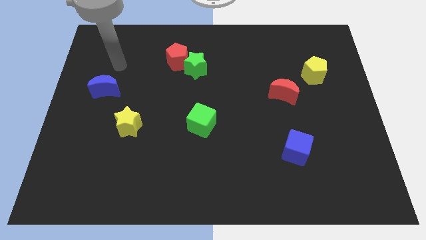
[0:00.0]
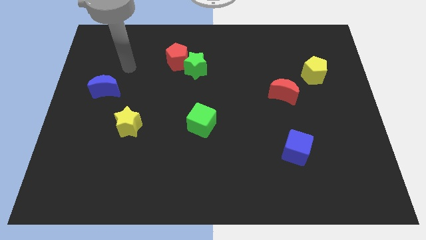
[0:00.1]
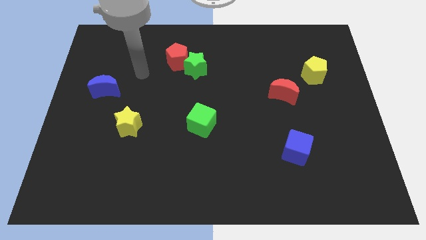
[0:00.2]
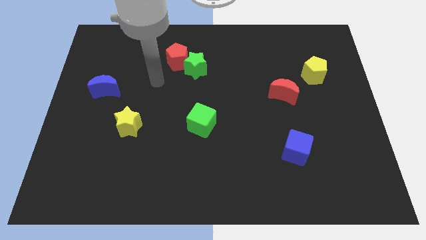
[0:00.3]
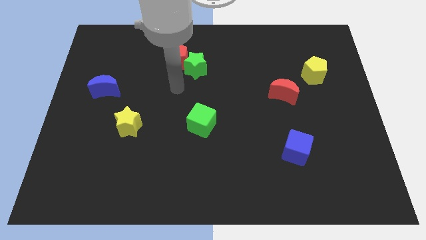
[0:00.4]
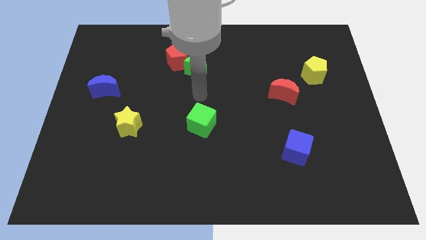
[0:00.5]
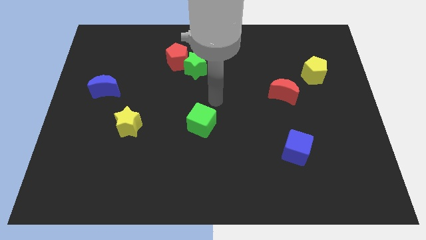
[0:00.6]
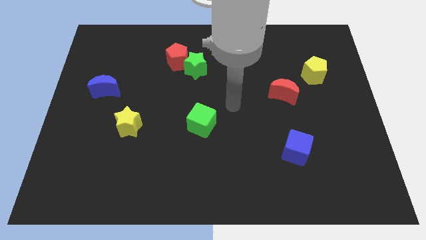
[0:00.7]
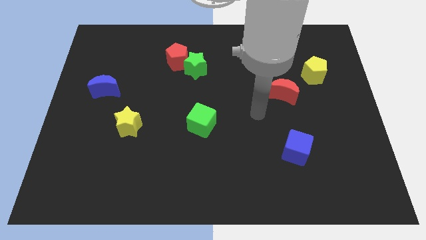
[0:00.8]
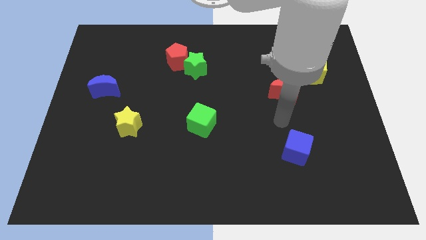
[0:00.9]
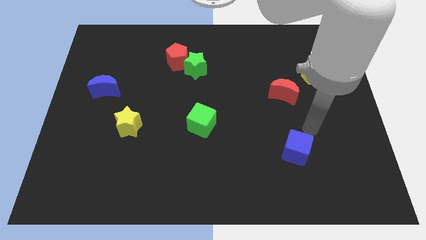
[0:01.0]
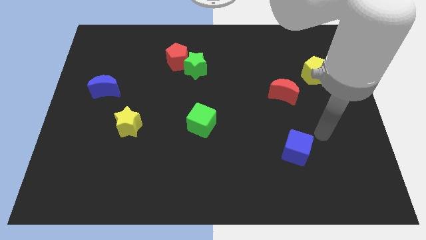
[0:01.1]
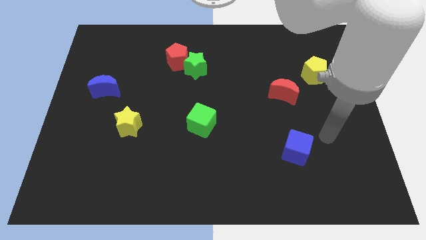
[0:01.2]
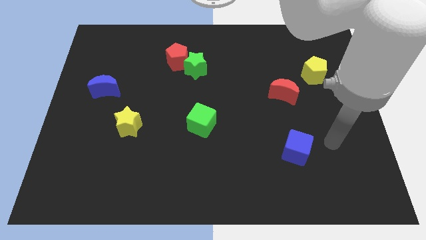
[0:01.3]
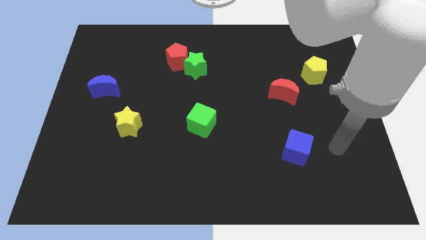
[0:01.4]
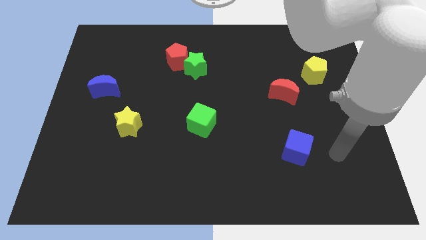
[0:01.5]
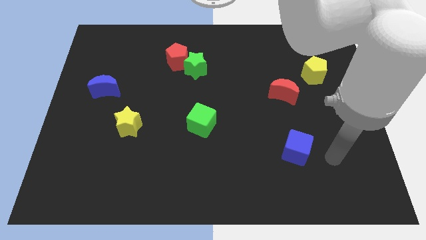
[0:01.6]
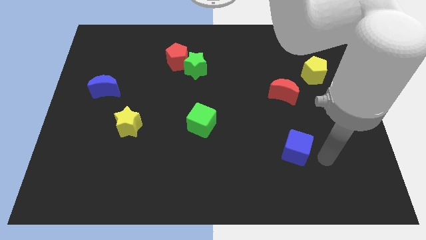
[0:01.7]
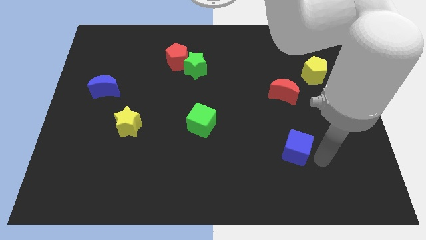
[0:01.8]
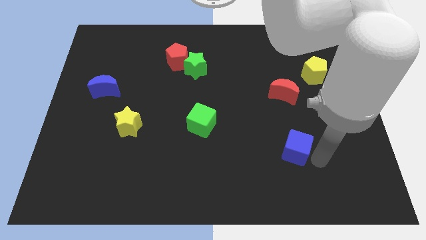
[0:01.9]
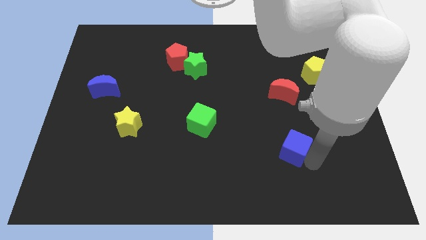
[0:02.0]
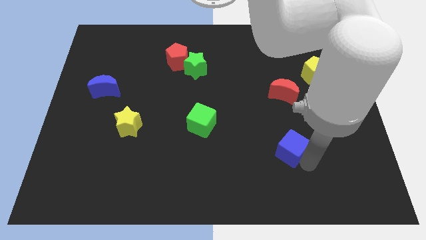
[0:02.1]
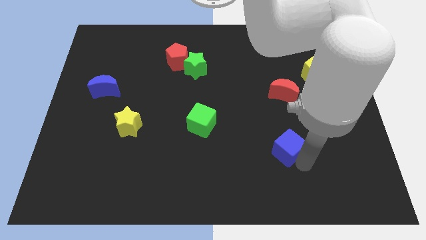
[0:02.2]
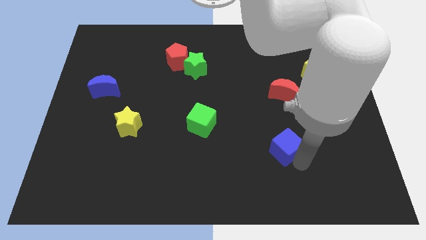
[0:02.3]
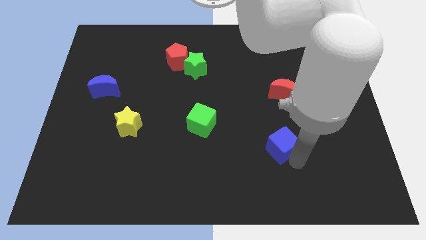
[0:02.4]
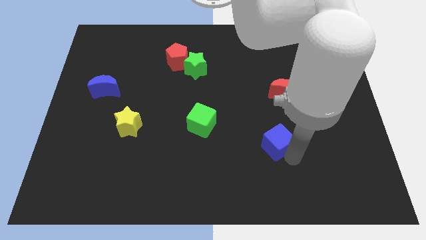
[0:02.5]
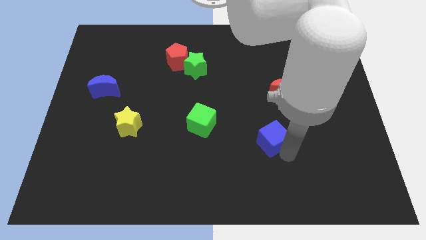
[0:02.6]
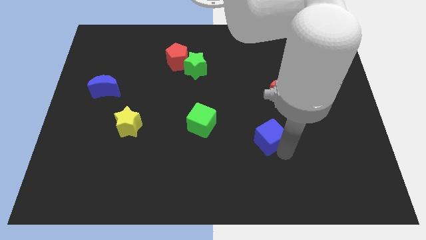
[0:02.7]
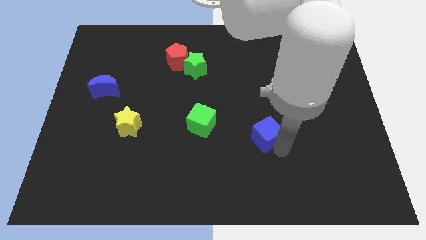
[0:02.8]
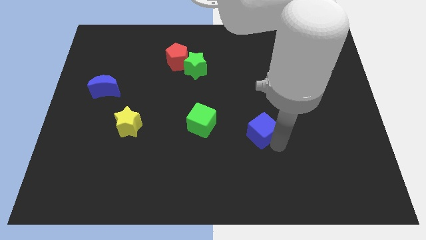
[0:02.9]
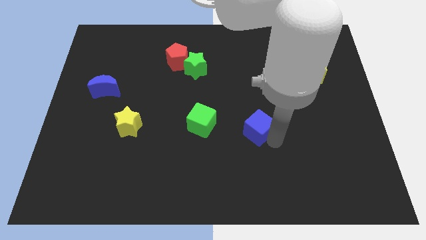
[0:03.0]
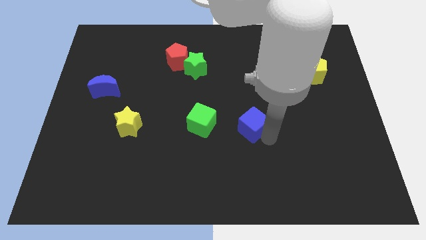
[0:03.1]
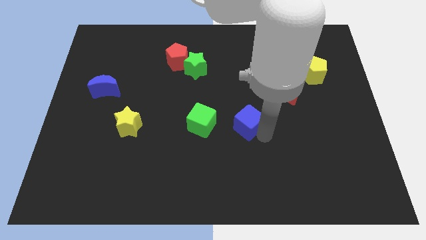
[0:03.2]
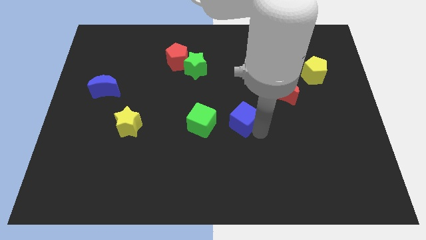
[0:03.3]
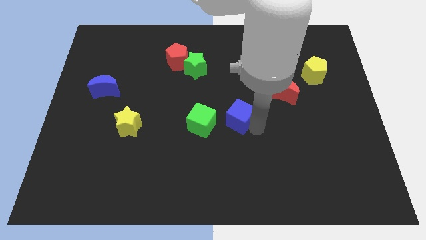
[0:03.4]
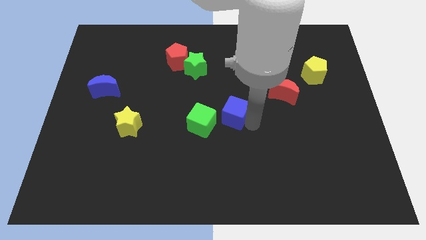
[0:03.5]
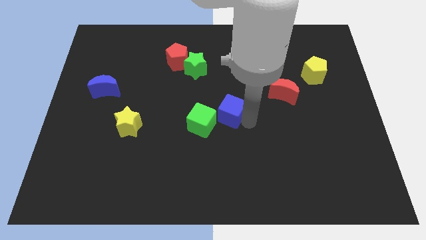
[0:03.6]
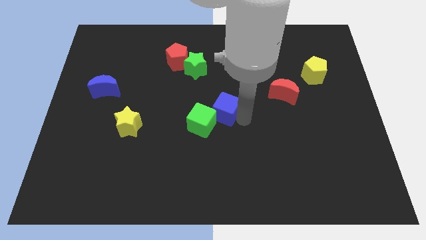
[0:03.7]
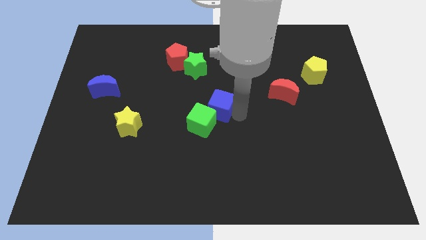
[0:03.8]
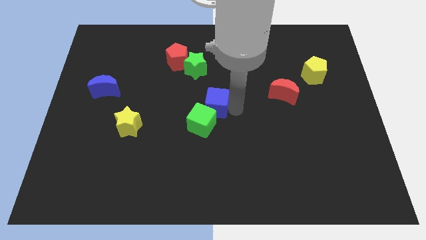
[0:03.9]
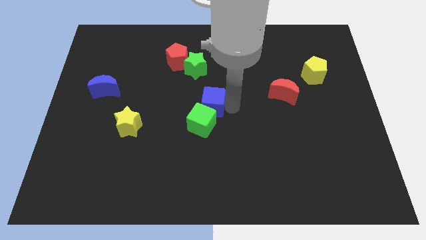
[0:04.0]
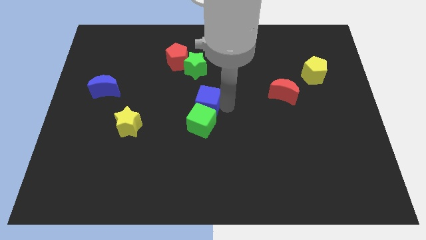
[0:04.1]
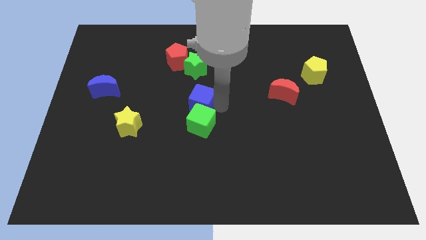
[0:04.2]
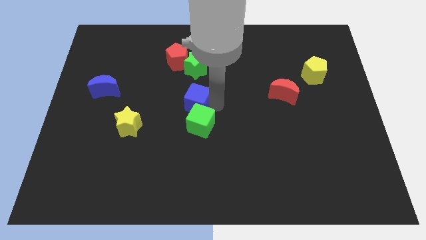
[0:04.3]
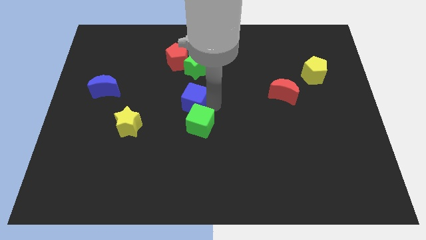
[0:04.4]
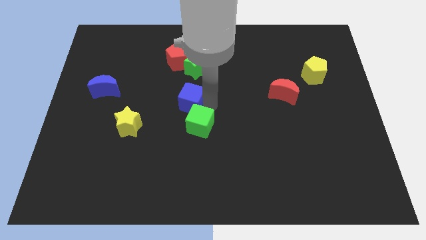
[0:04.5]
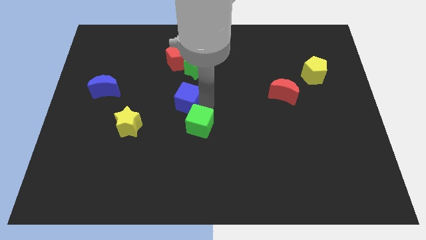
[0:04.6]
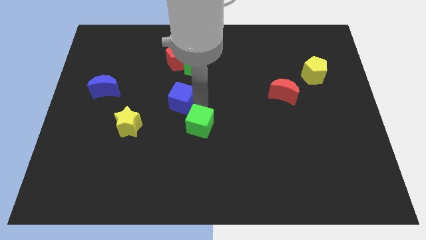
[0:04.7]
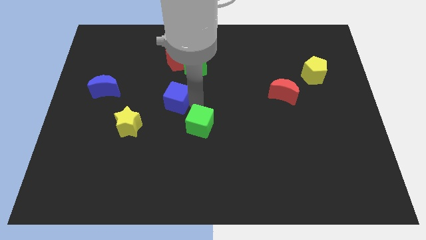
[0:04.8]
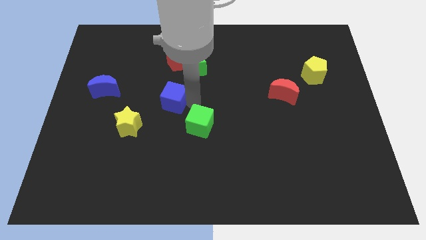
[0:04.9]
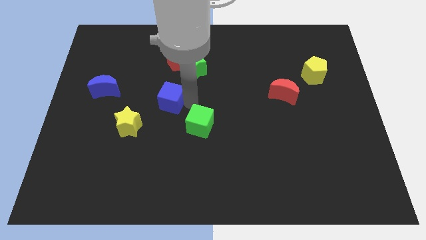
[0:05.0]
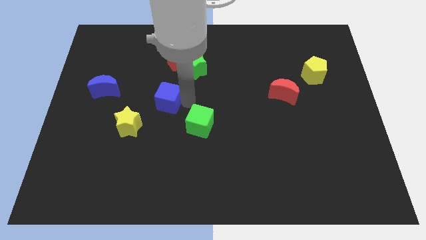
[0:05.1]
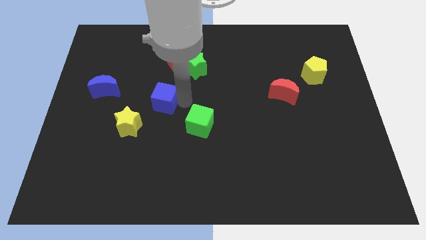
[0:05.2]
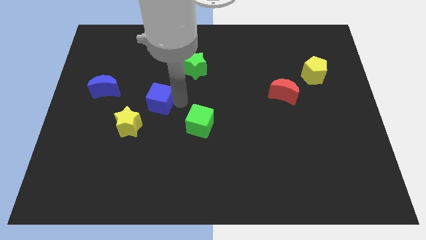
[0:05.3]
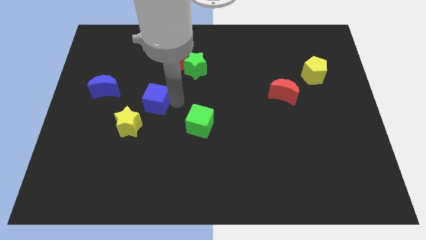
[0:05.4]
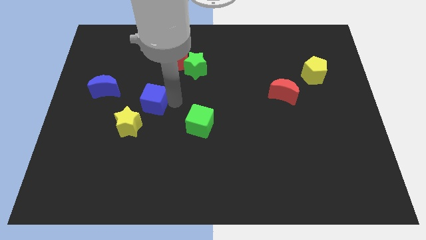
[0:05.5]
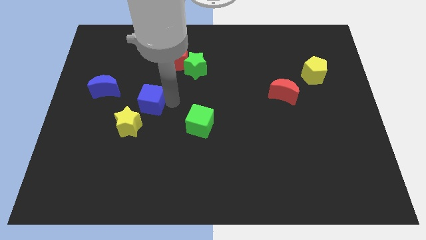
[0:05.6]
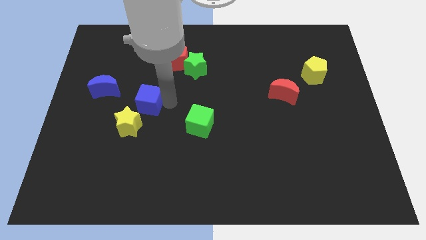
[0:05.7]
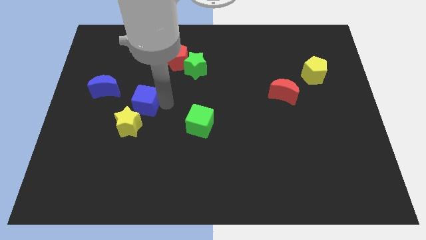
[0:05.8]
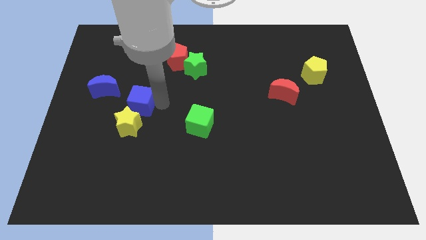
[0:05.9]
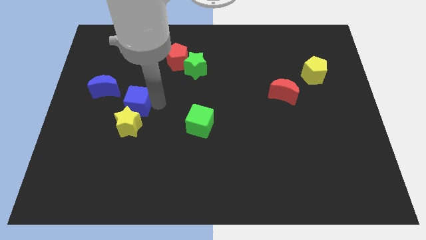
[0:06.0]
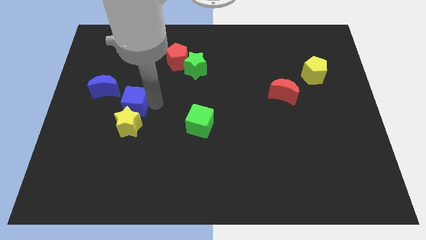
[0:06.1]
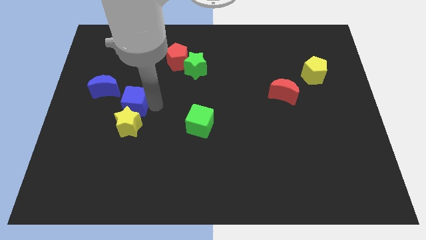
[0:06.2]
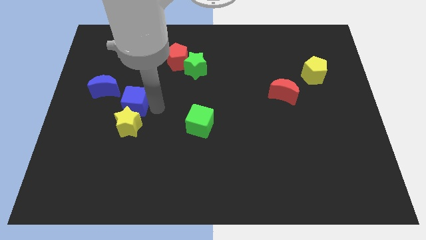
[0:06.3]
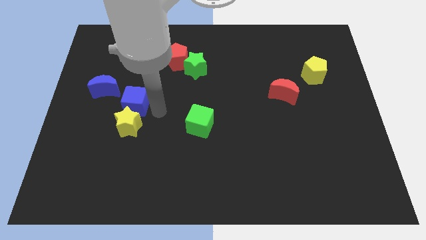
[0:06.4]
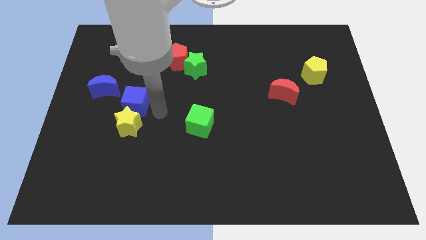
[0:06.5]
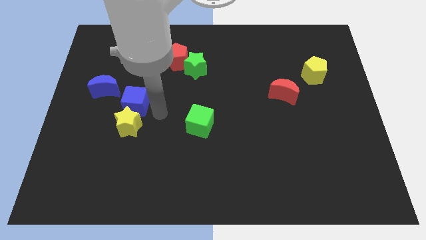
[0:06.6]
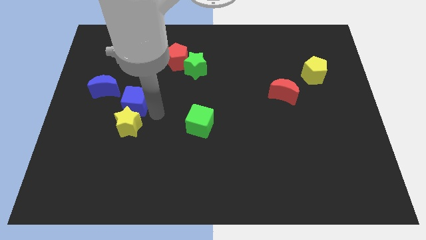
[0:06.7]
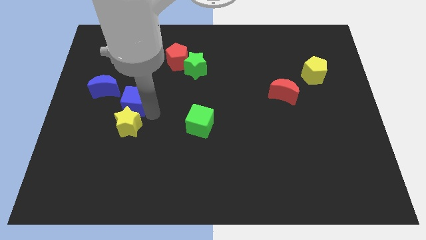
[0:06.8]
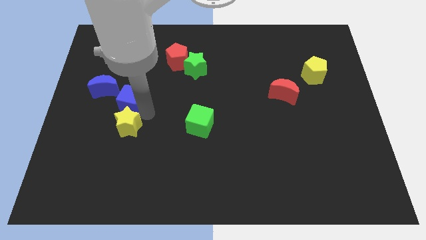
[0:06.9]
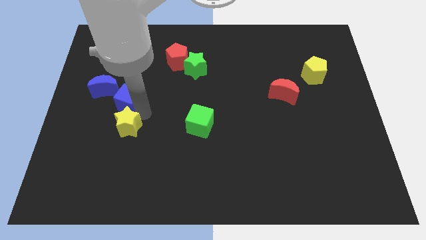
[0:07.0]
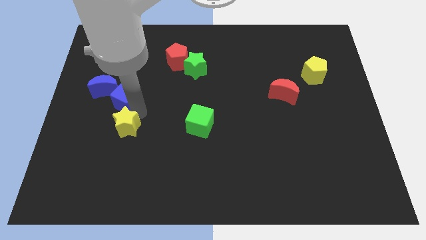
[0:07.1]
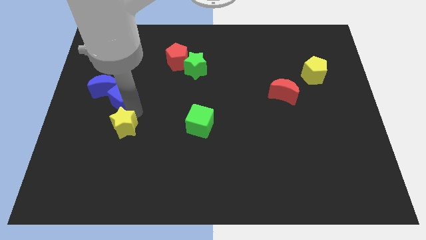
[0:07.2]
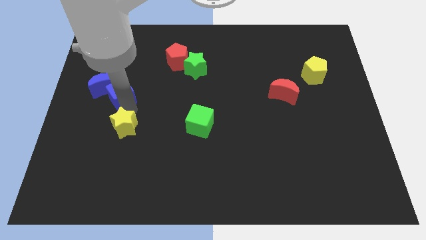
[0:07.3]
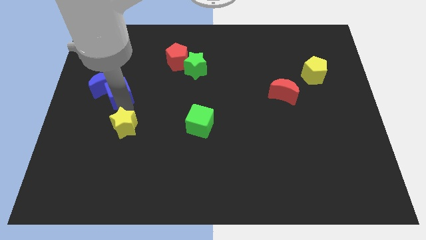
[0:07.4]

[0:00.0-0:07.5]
push the blue cube next to the blue moon

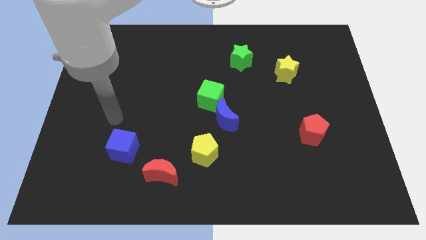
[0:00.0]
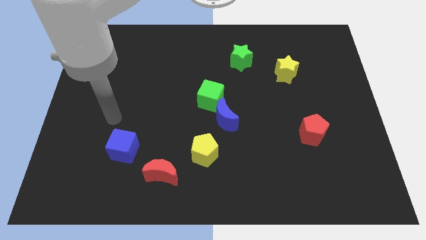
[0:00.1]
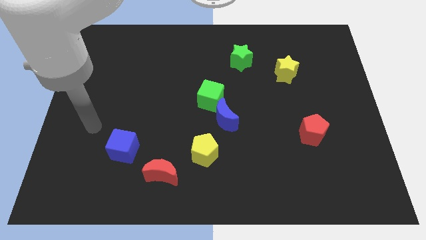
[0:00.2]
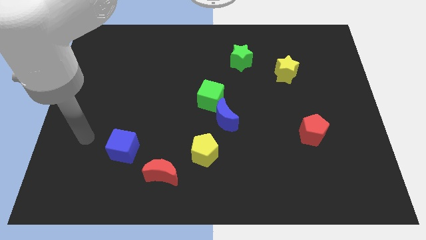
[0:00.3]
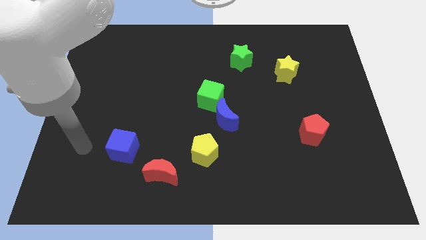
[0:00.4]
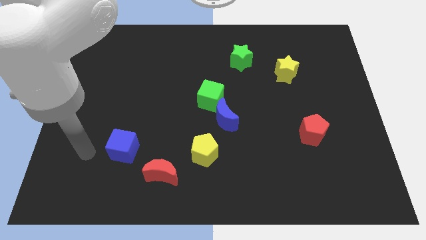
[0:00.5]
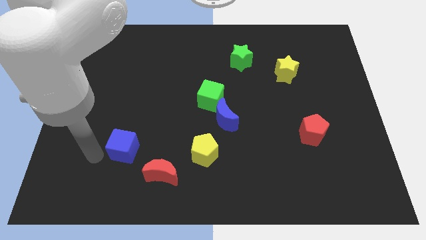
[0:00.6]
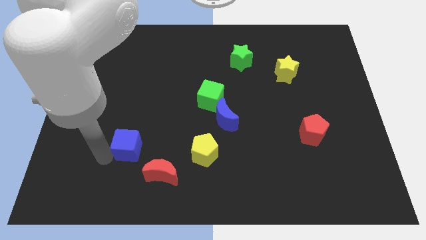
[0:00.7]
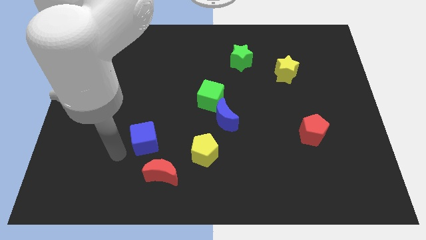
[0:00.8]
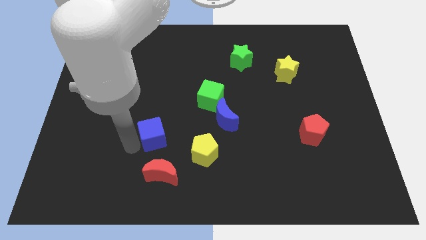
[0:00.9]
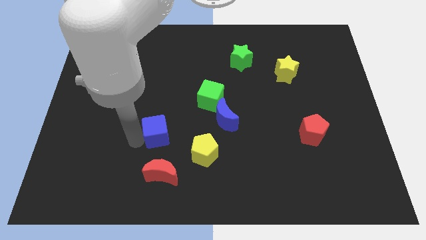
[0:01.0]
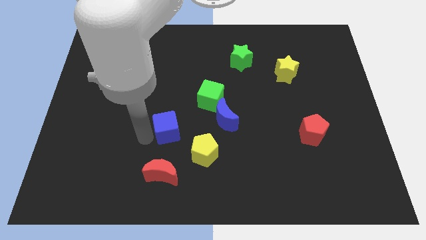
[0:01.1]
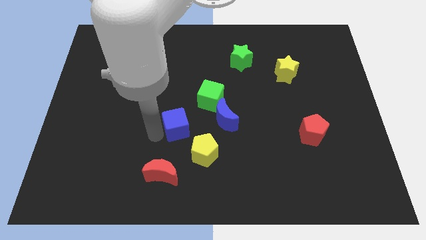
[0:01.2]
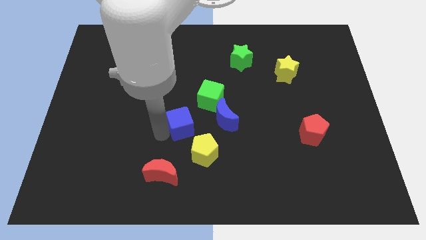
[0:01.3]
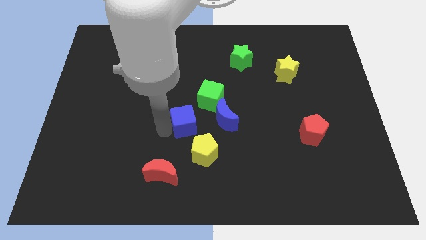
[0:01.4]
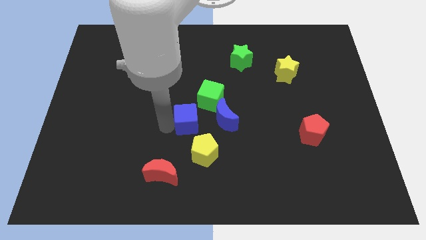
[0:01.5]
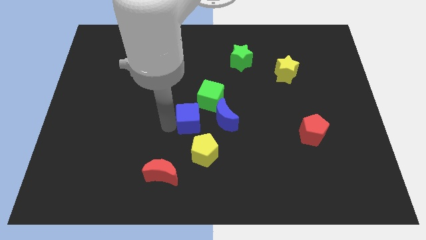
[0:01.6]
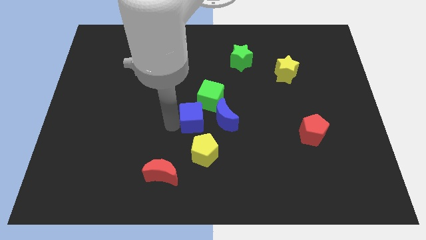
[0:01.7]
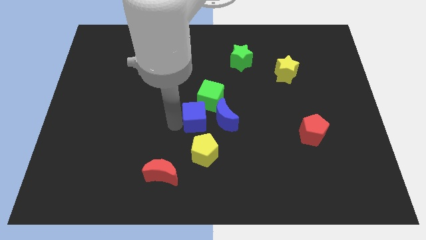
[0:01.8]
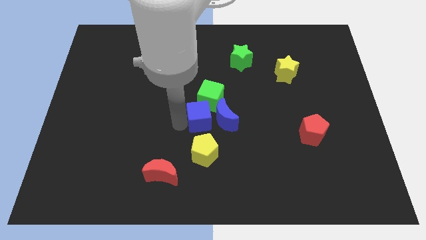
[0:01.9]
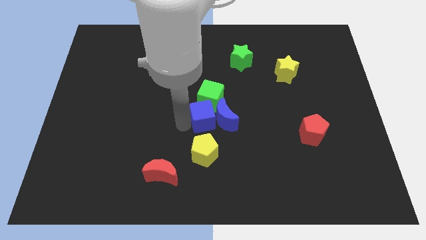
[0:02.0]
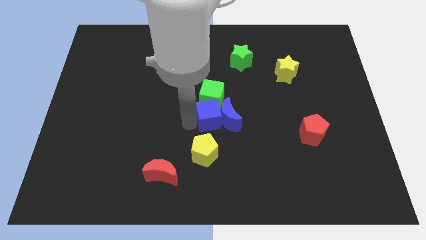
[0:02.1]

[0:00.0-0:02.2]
slide the blue cube towards the blue moon
